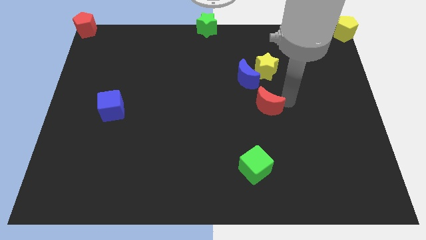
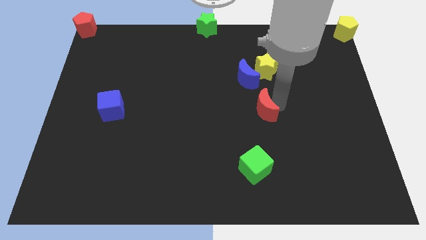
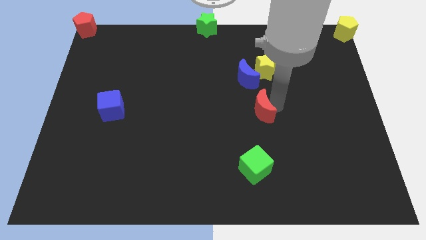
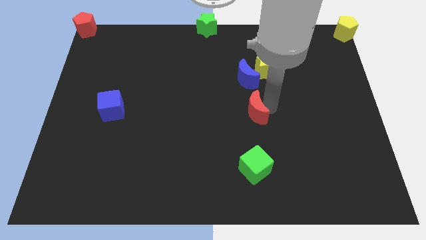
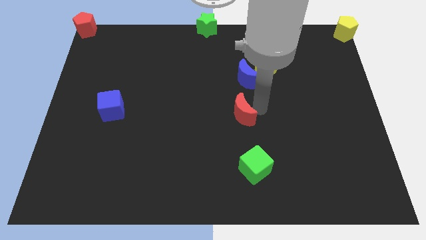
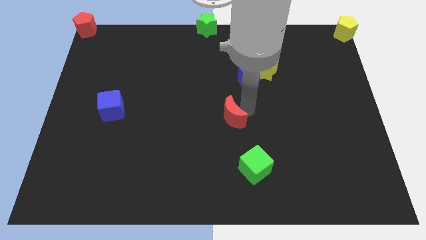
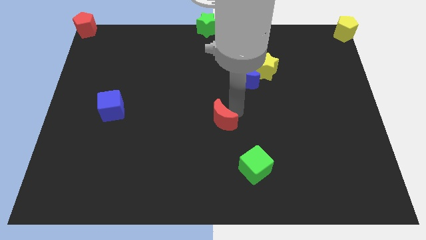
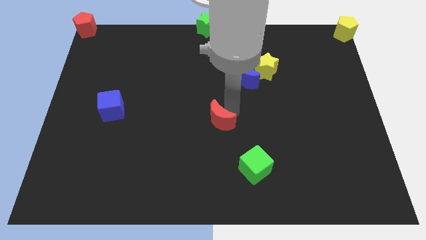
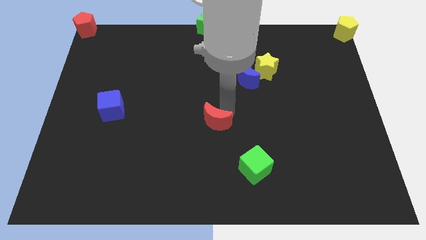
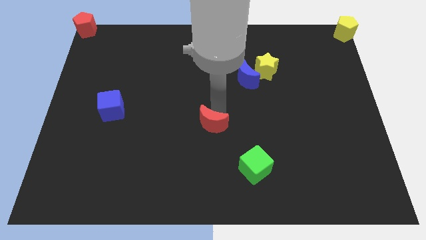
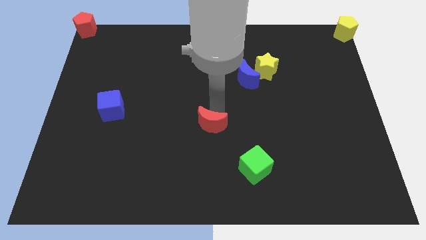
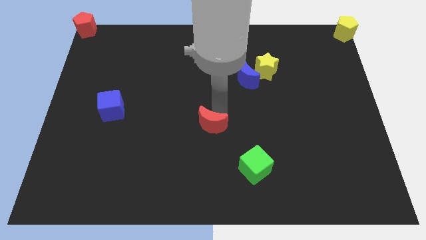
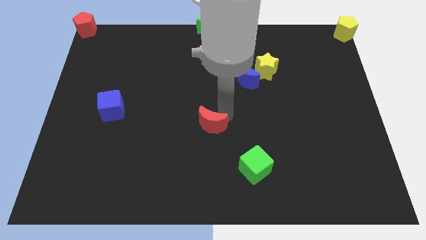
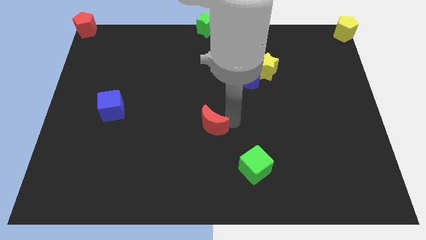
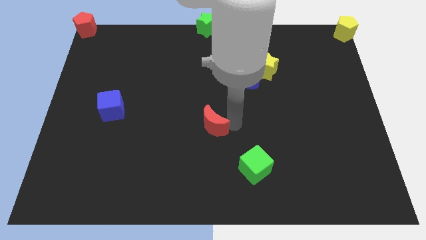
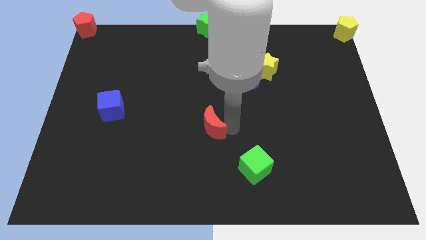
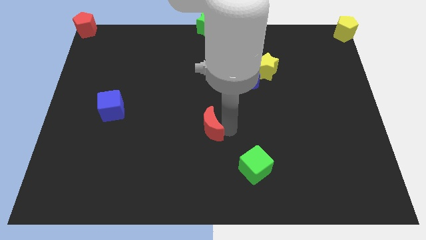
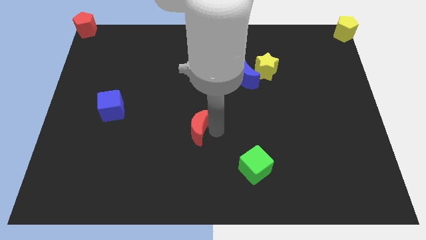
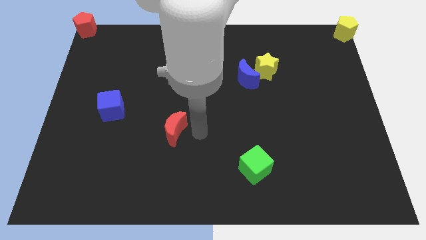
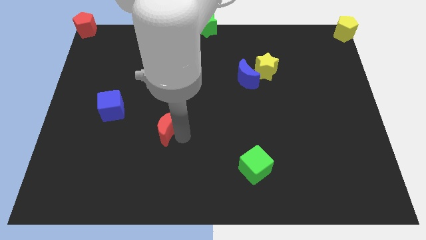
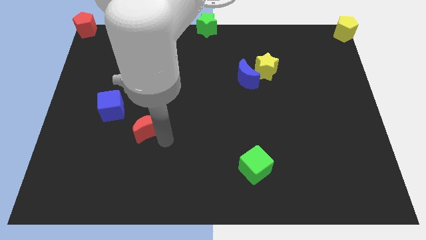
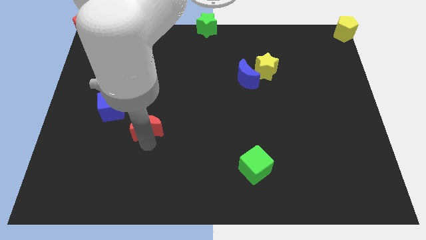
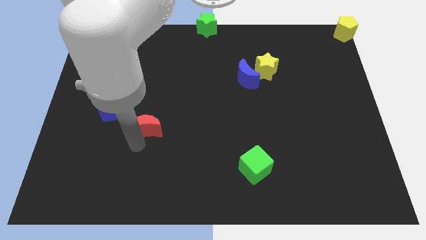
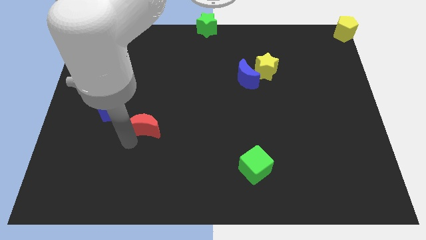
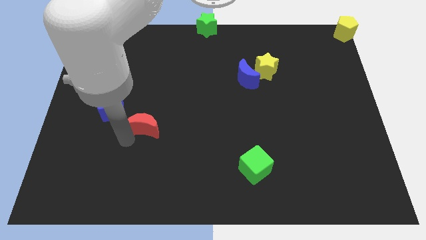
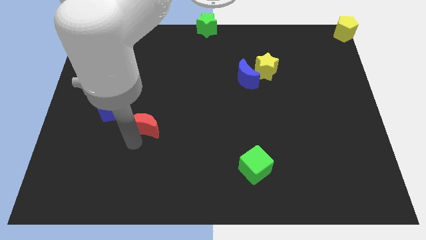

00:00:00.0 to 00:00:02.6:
move the red crescent right diagonal to the blue cube

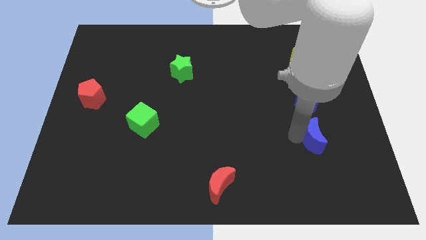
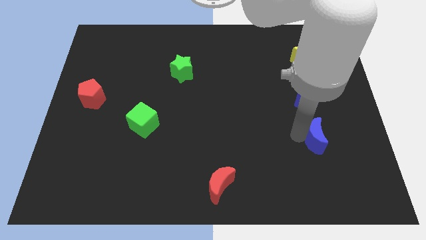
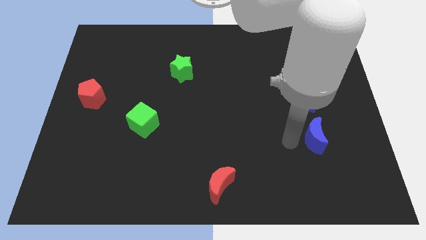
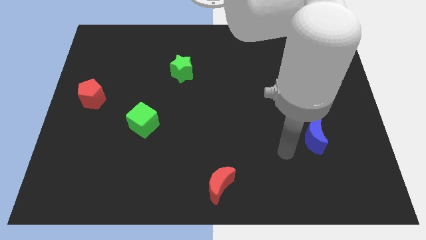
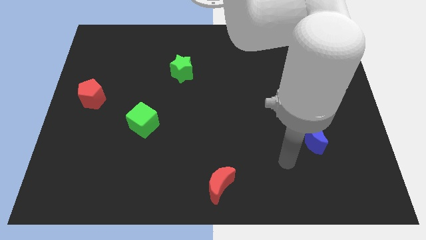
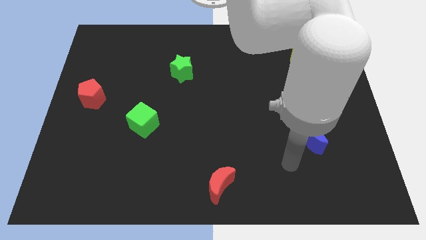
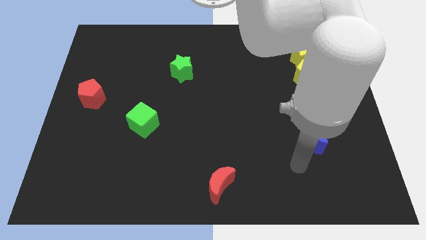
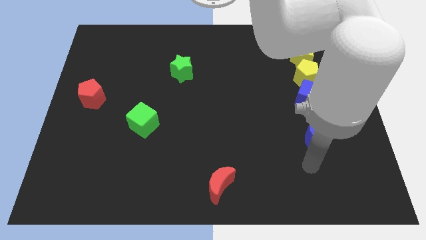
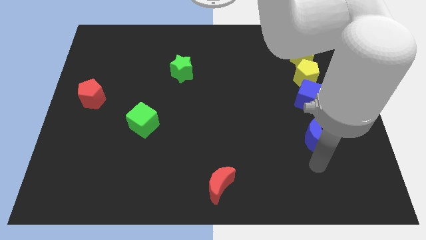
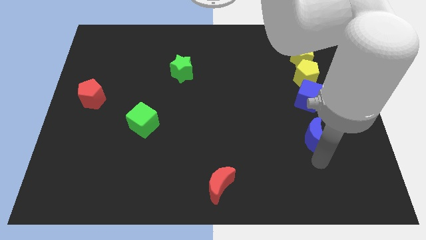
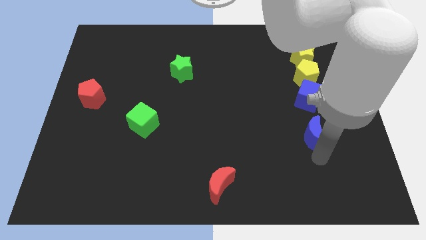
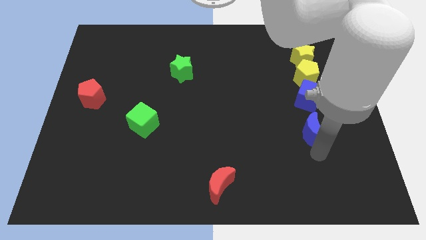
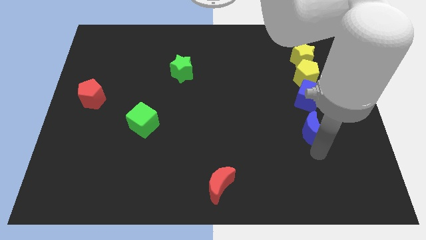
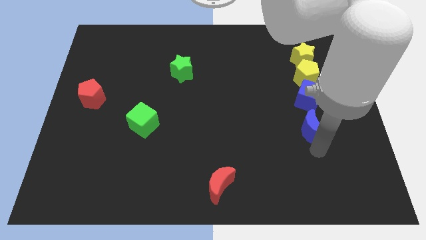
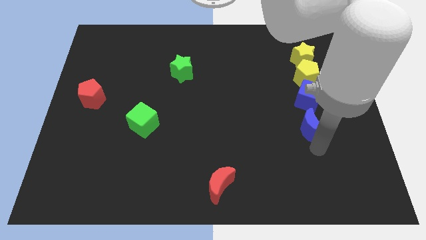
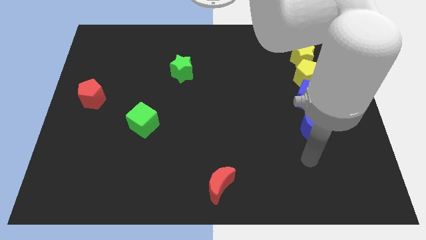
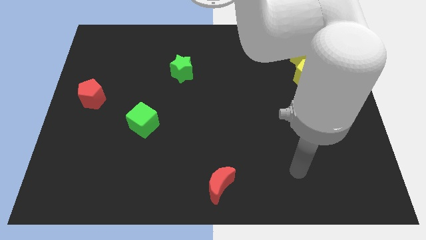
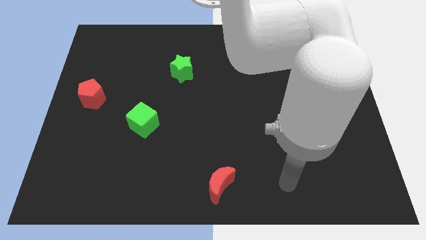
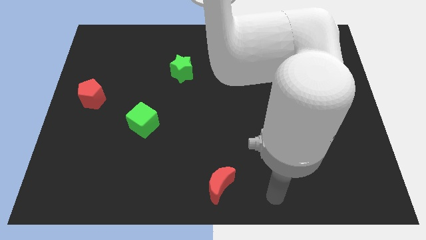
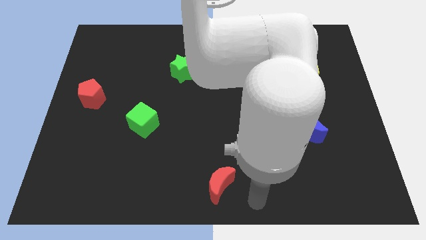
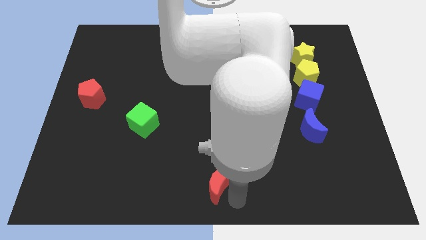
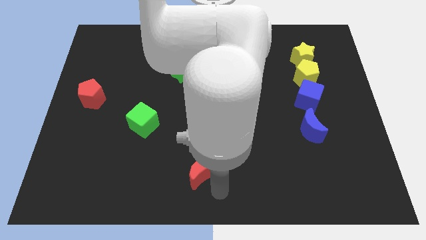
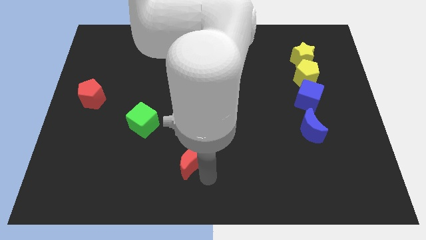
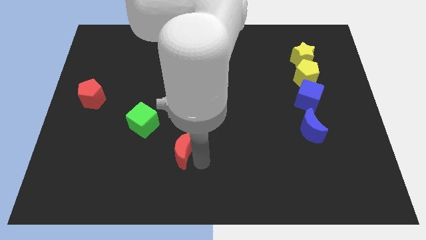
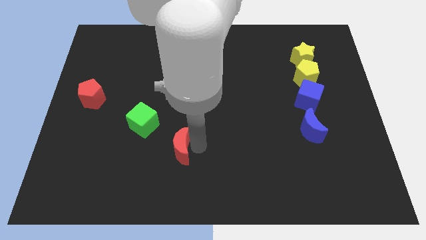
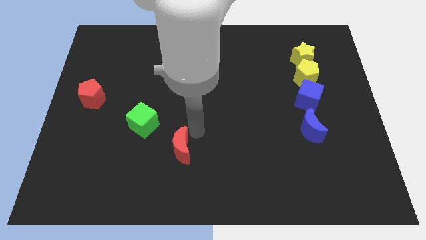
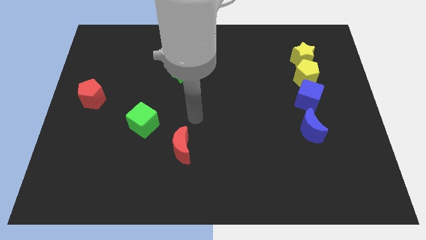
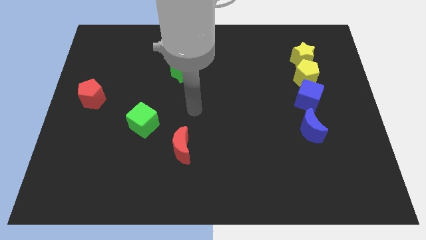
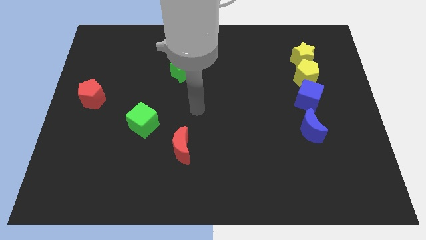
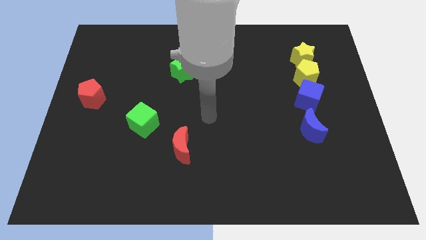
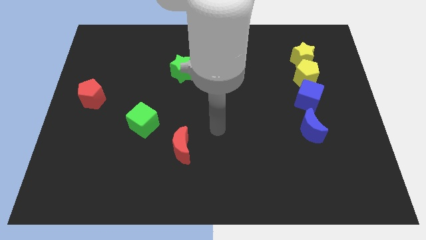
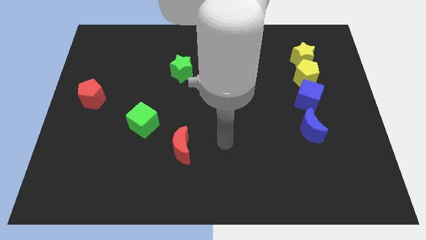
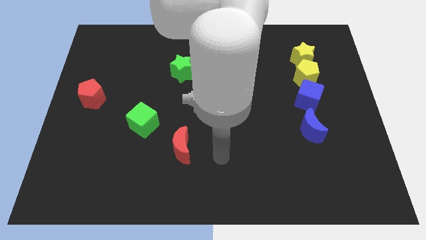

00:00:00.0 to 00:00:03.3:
move your arm away from the blue moon

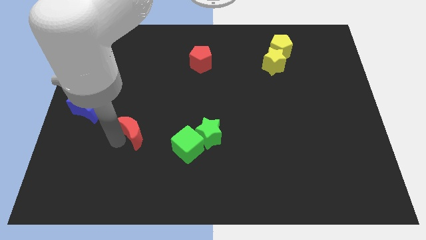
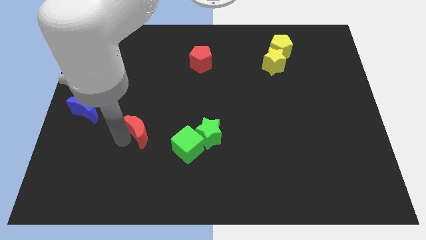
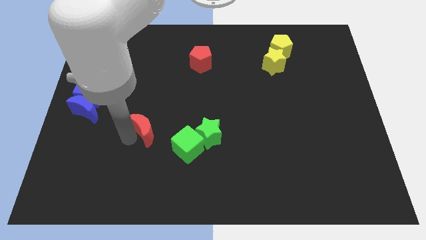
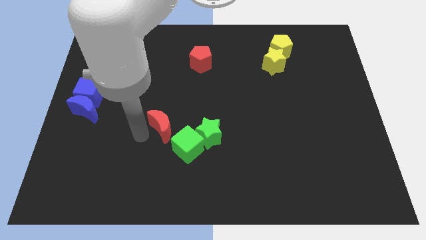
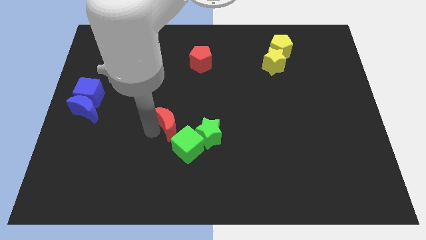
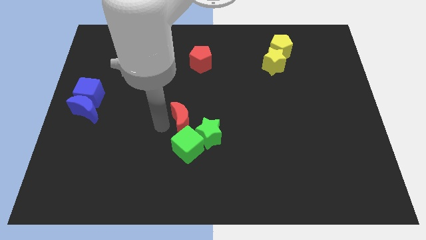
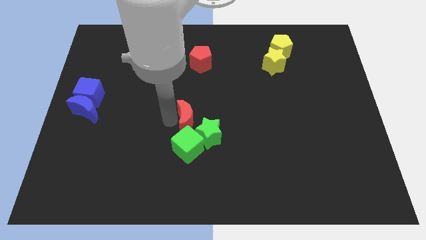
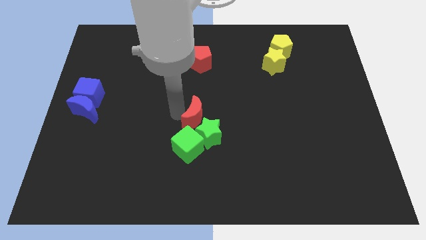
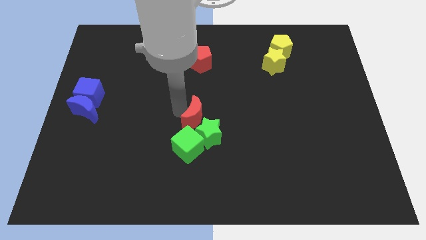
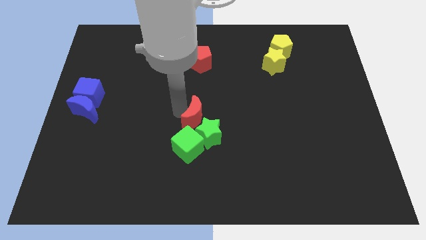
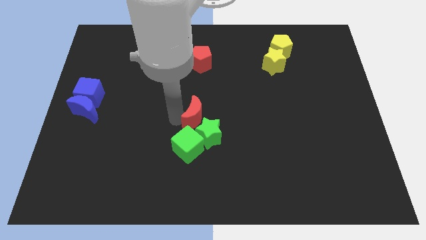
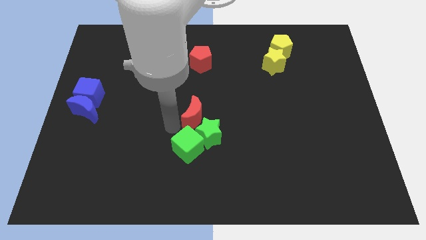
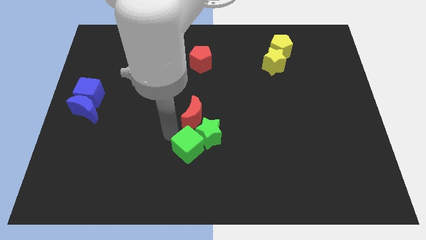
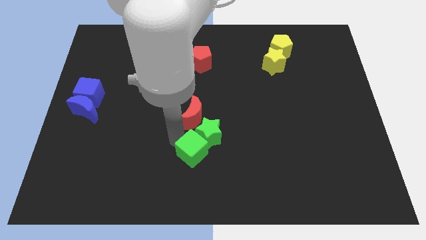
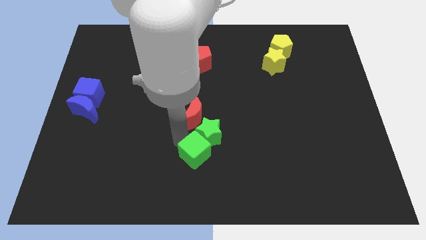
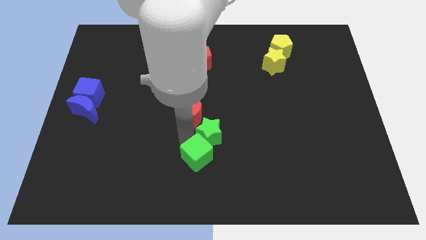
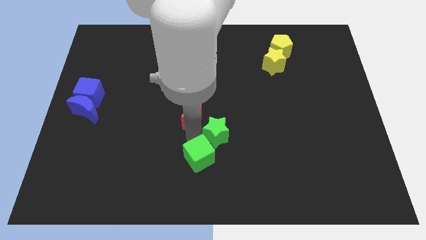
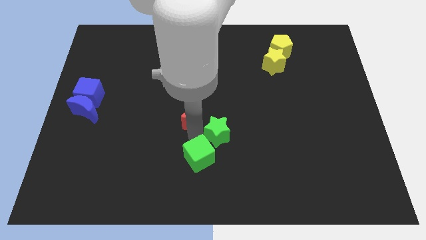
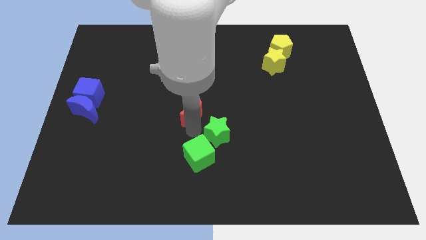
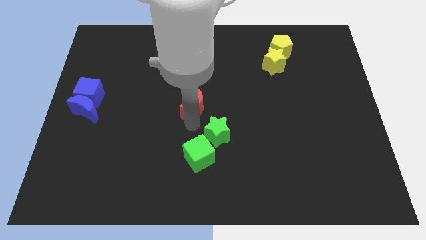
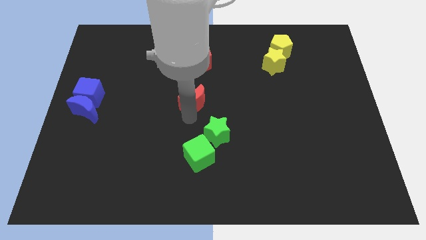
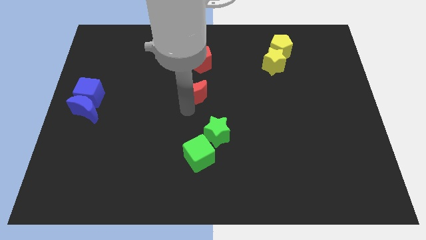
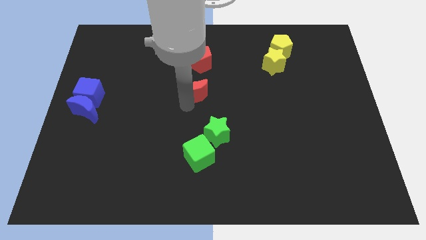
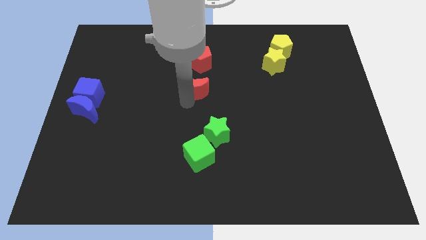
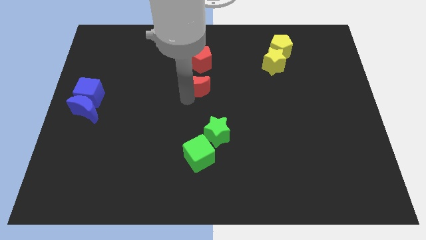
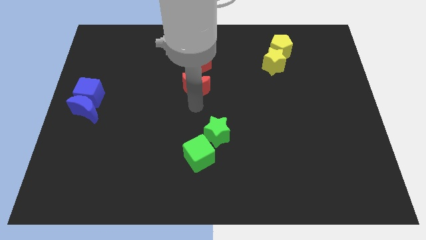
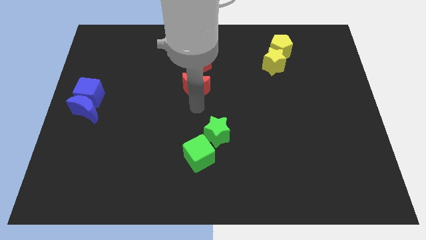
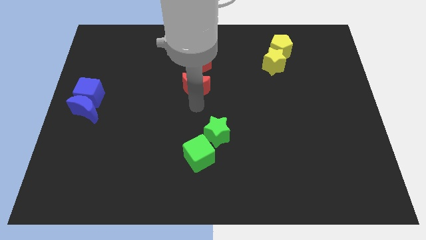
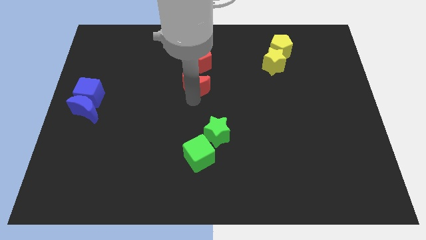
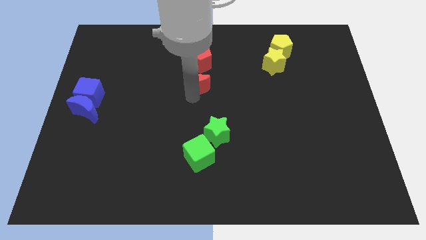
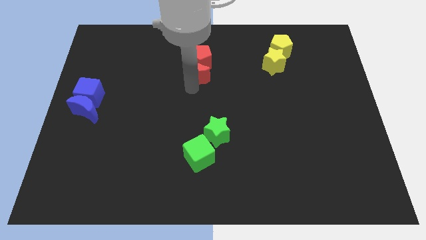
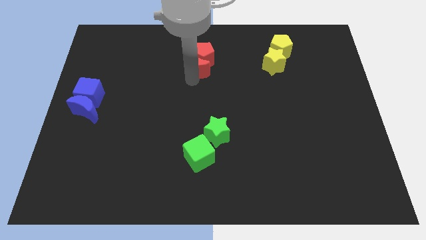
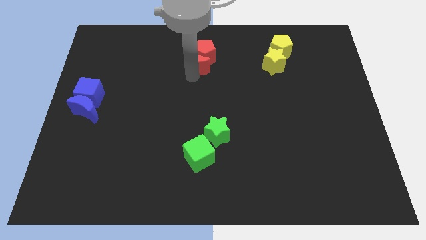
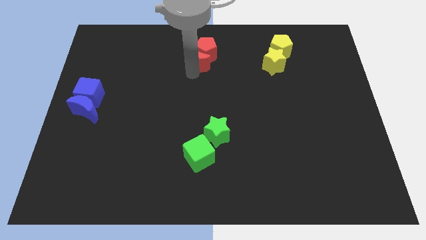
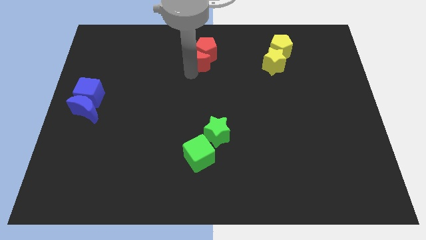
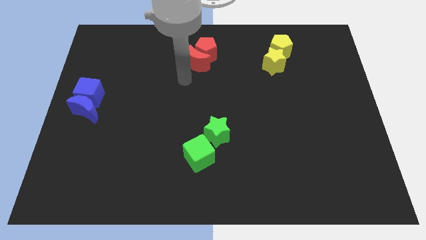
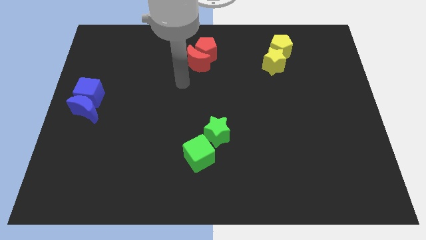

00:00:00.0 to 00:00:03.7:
push the red crescent into the red pentagon
